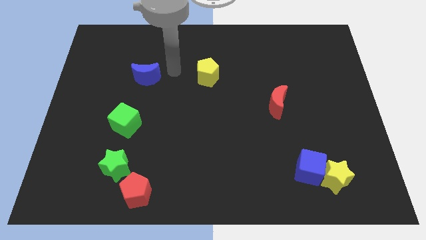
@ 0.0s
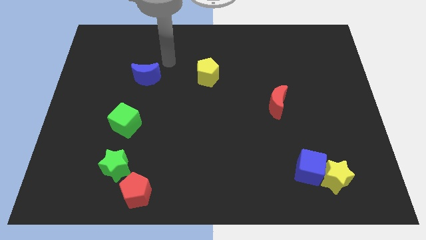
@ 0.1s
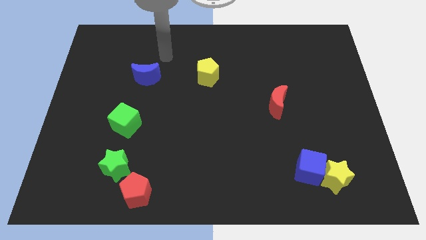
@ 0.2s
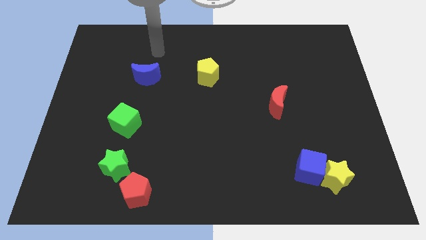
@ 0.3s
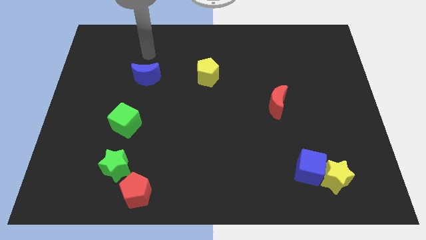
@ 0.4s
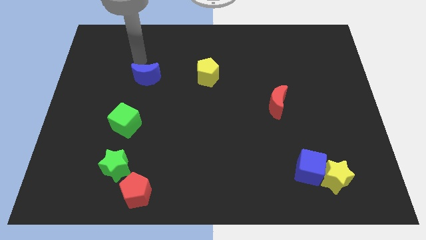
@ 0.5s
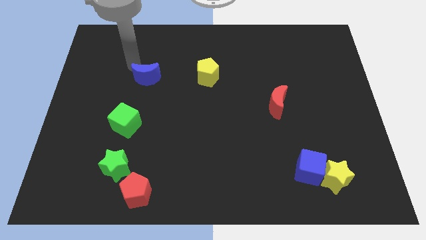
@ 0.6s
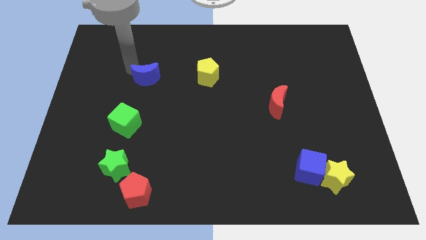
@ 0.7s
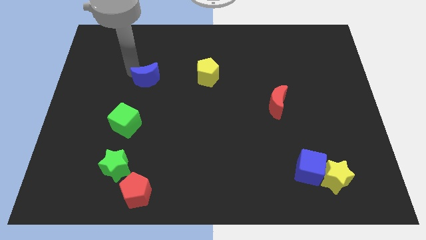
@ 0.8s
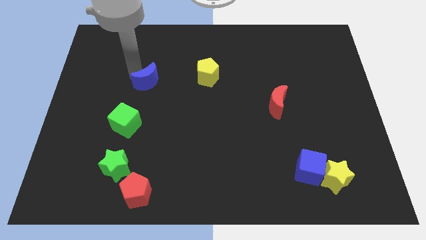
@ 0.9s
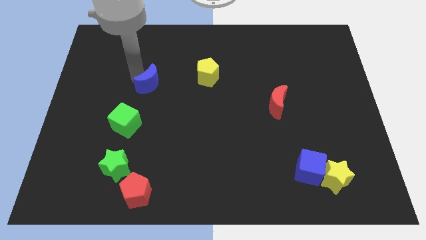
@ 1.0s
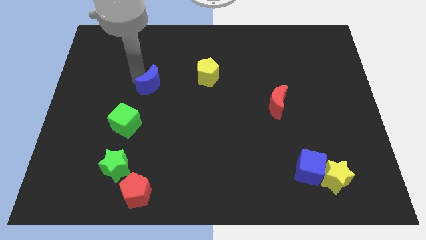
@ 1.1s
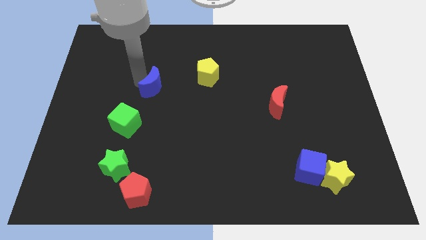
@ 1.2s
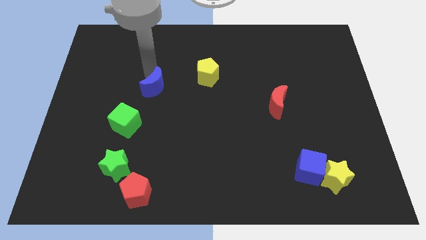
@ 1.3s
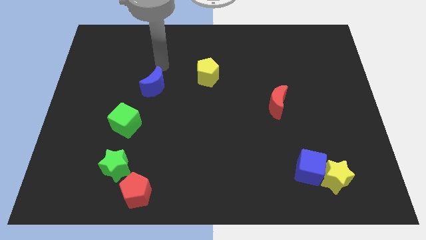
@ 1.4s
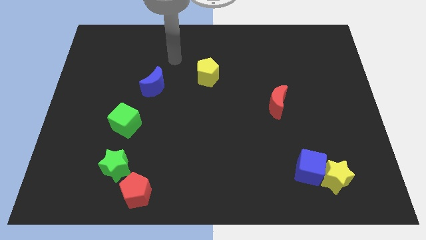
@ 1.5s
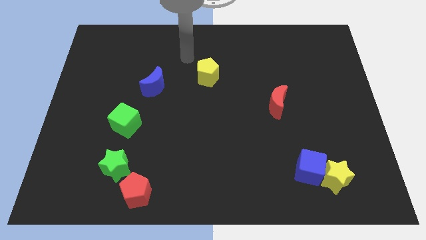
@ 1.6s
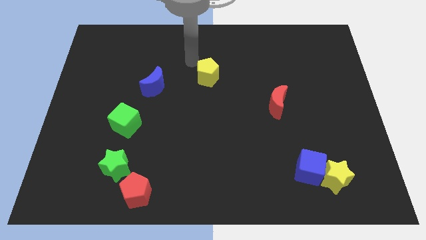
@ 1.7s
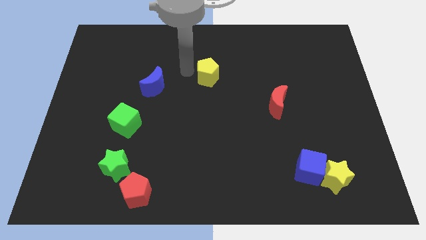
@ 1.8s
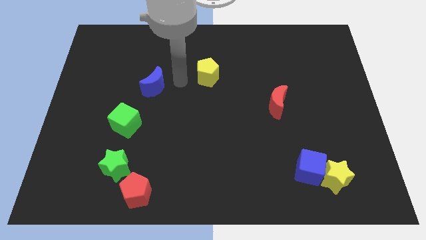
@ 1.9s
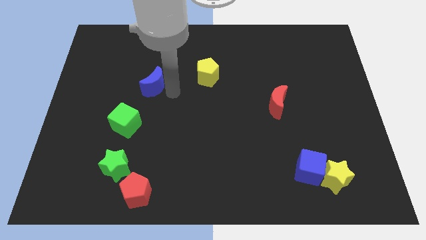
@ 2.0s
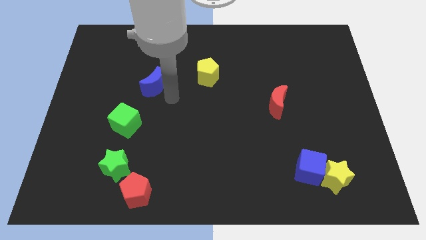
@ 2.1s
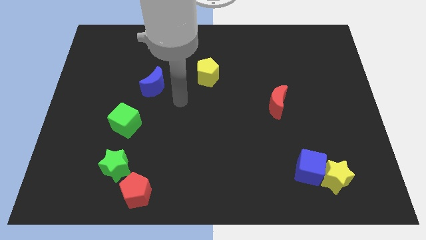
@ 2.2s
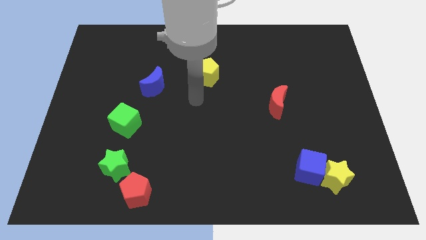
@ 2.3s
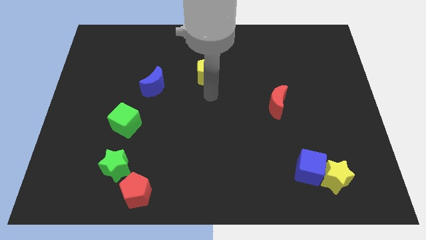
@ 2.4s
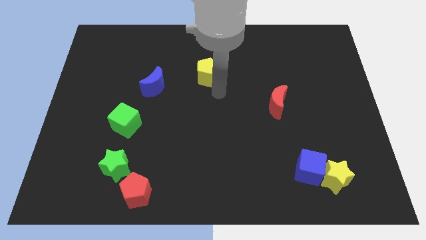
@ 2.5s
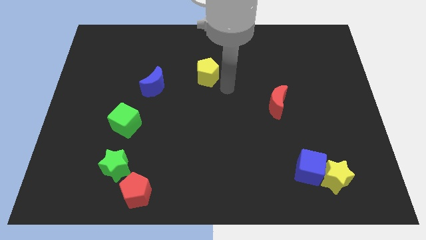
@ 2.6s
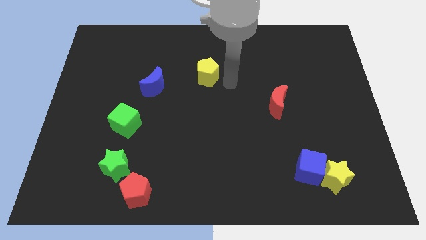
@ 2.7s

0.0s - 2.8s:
move the blue moon slightly towards the center of the board

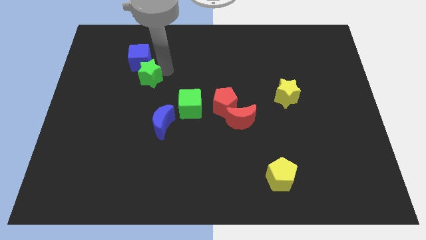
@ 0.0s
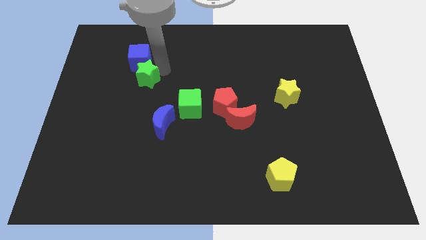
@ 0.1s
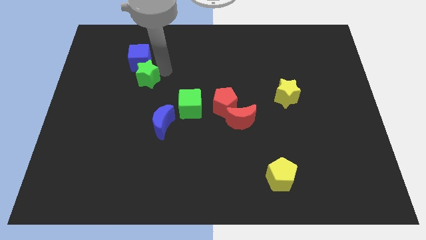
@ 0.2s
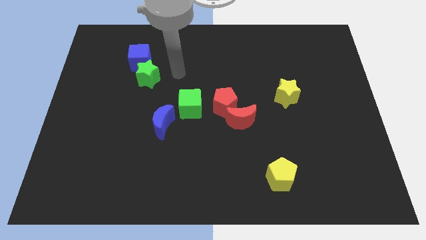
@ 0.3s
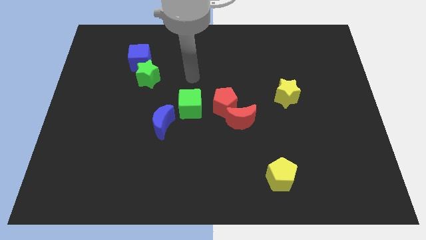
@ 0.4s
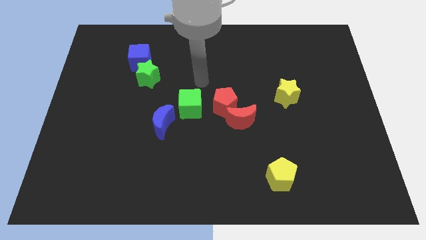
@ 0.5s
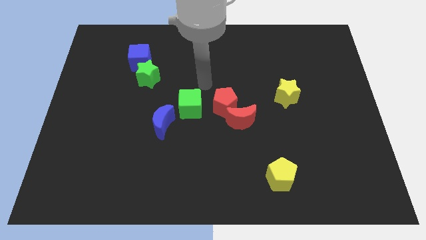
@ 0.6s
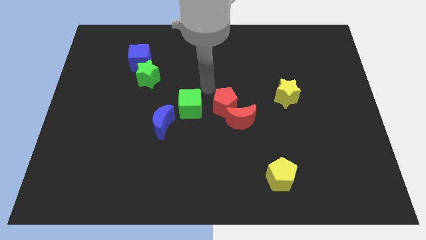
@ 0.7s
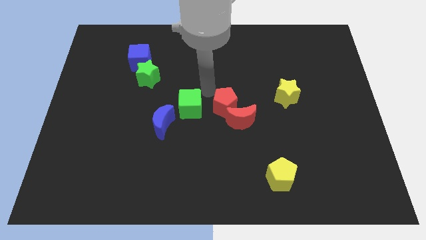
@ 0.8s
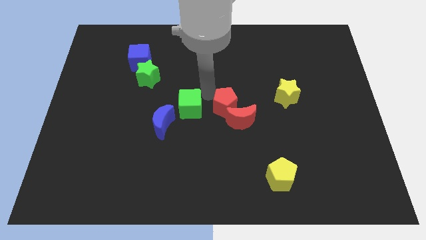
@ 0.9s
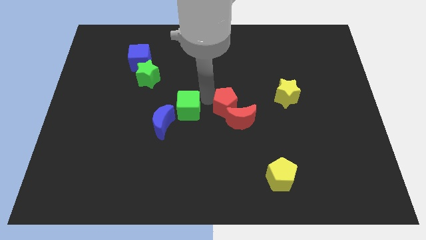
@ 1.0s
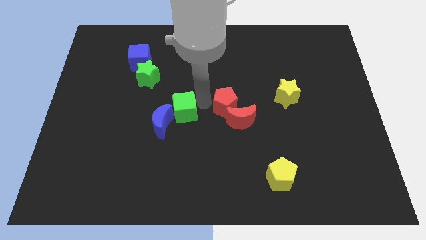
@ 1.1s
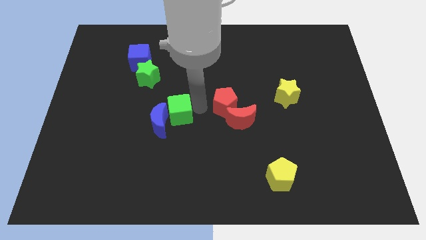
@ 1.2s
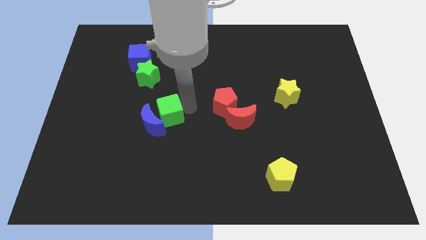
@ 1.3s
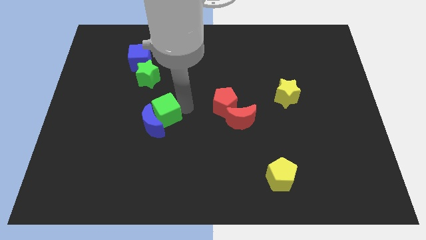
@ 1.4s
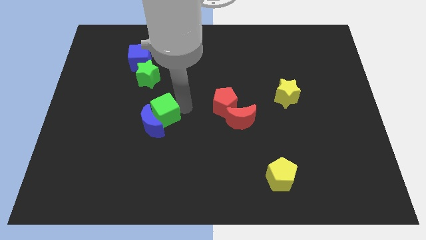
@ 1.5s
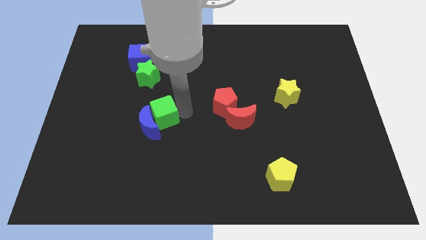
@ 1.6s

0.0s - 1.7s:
push green cube into the blue moon

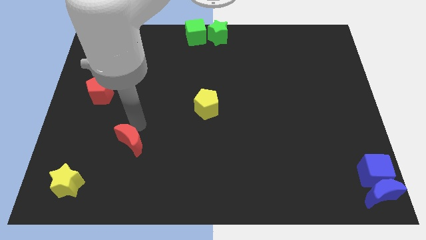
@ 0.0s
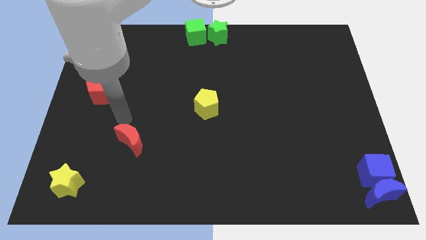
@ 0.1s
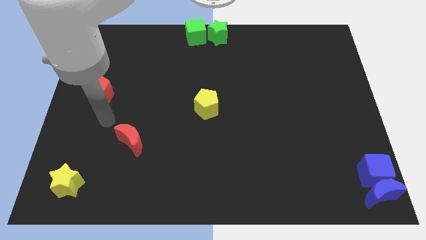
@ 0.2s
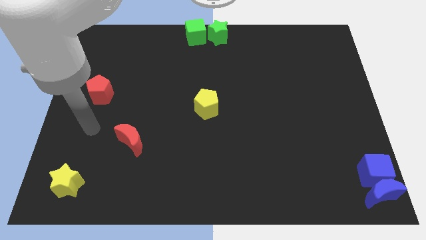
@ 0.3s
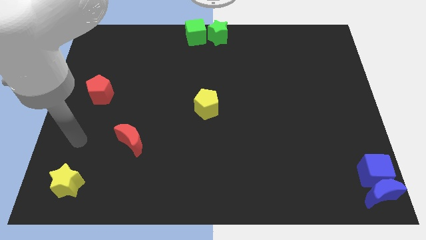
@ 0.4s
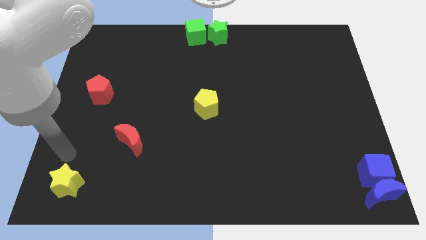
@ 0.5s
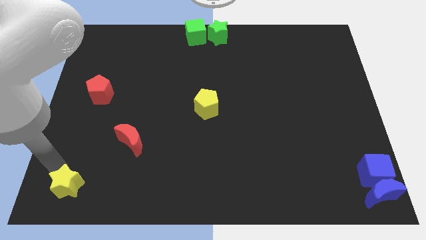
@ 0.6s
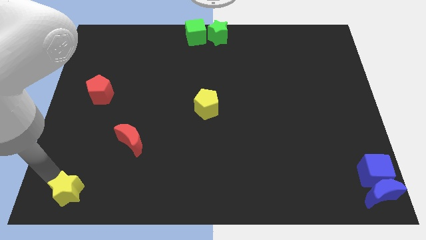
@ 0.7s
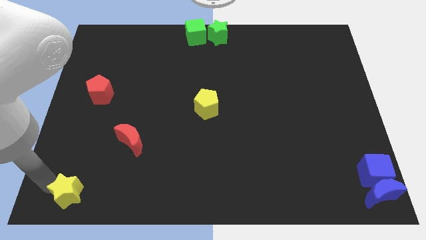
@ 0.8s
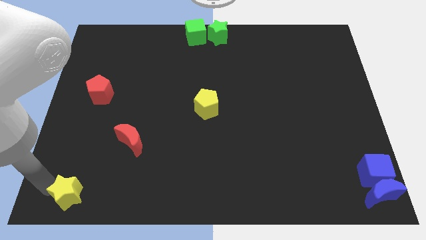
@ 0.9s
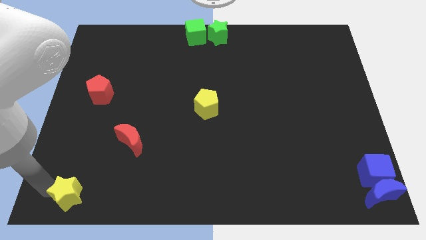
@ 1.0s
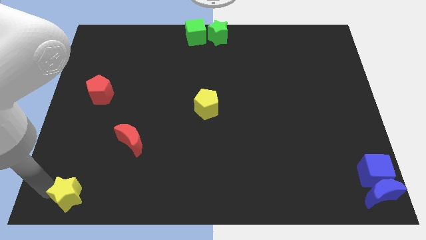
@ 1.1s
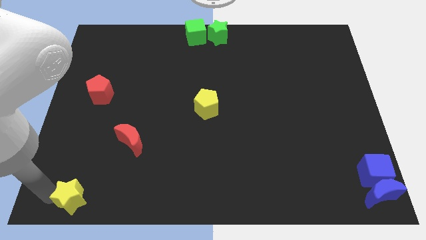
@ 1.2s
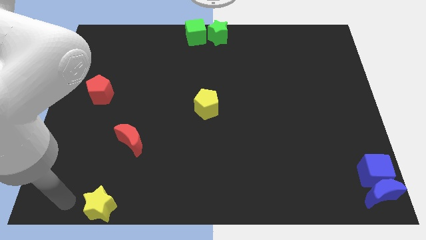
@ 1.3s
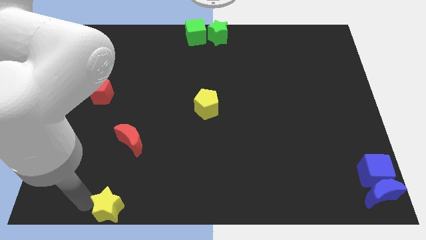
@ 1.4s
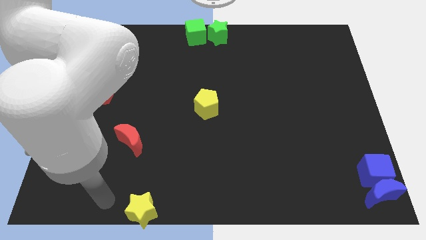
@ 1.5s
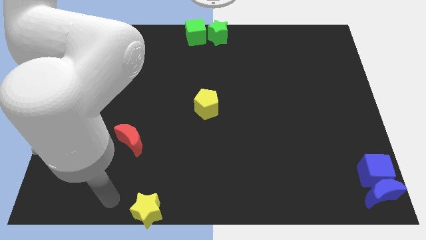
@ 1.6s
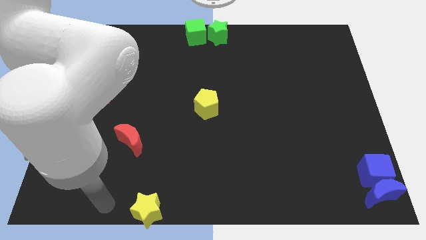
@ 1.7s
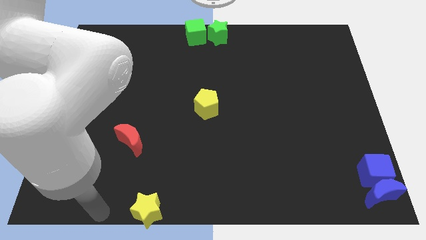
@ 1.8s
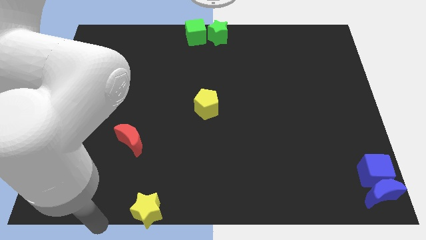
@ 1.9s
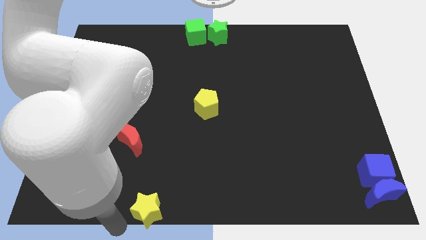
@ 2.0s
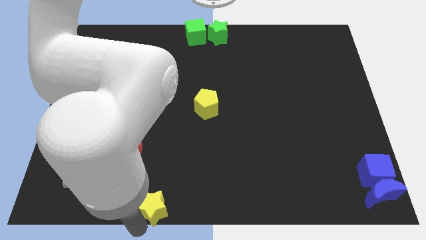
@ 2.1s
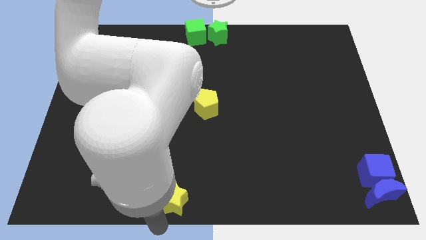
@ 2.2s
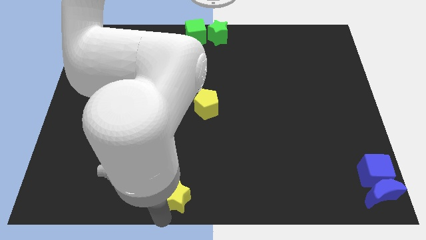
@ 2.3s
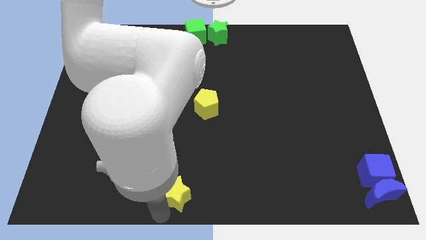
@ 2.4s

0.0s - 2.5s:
move the yellow star to the bottom center of the board

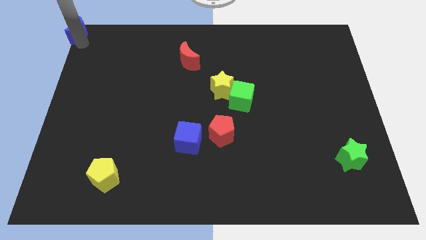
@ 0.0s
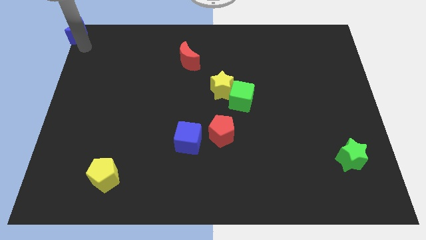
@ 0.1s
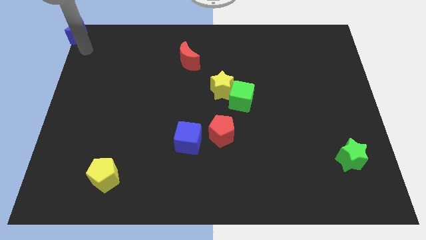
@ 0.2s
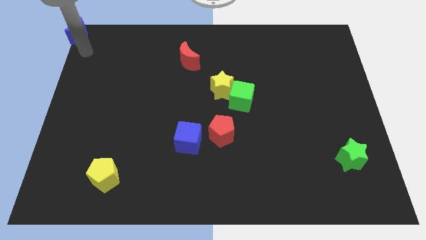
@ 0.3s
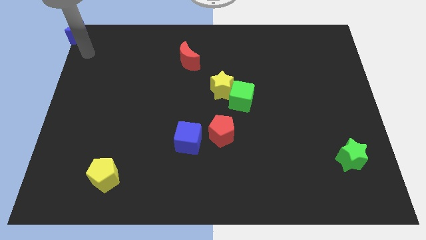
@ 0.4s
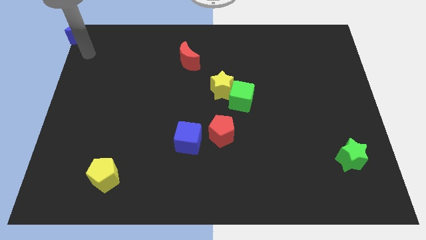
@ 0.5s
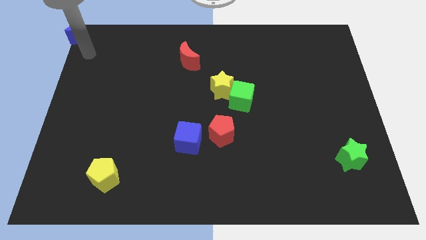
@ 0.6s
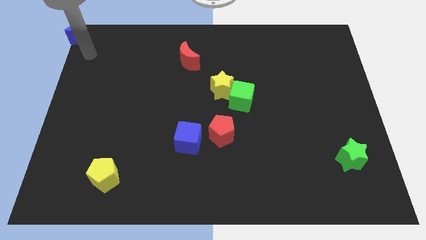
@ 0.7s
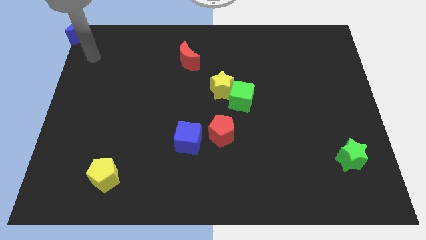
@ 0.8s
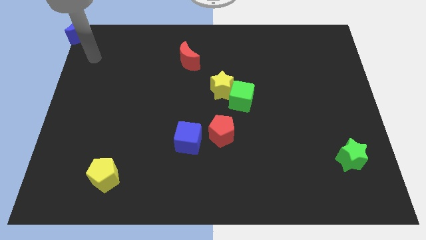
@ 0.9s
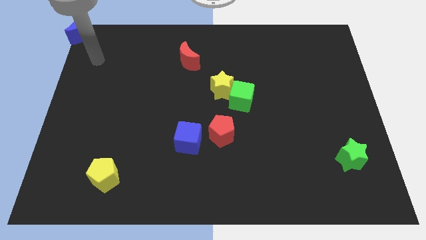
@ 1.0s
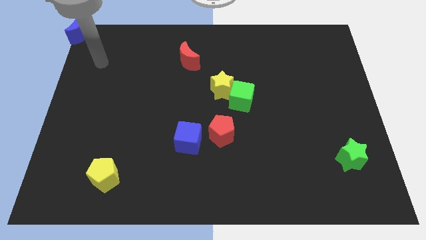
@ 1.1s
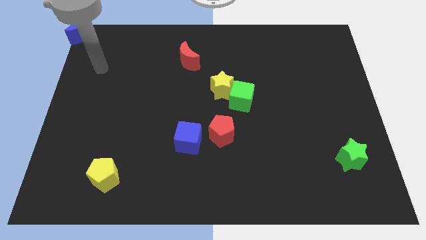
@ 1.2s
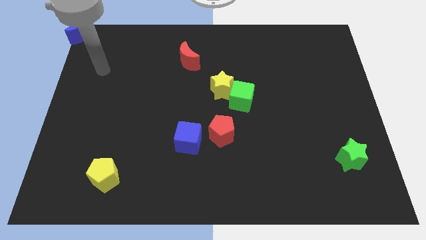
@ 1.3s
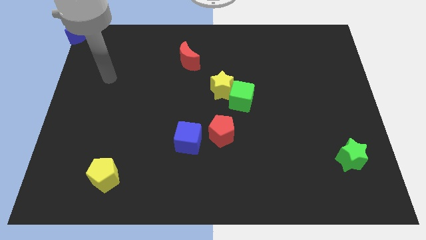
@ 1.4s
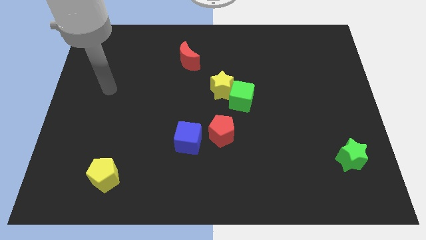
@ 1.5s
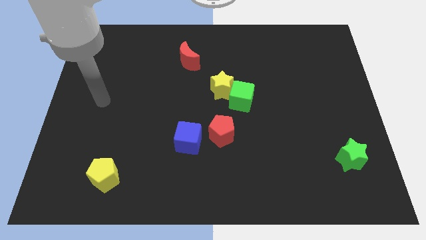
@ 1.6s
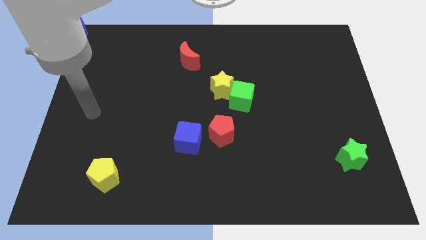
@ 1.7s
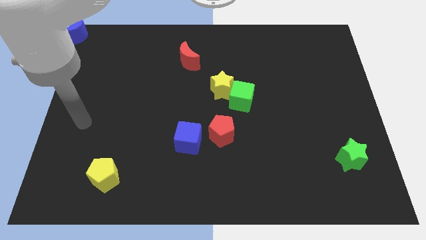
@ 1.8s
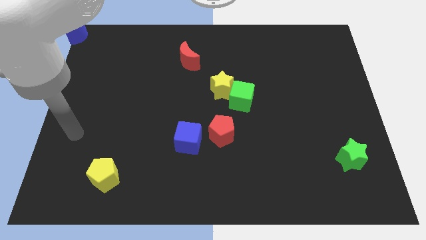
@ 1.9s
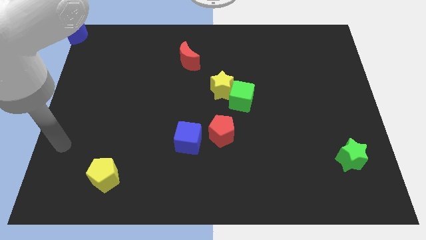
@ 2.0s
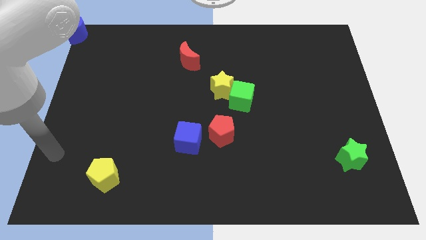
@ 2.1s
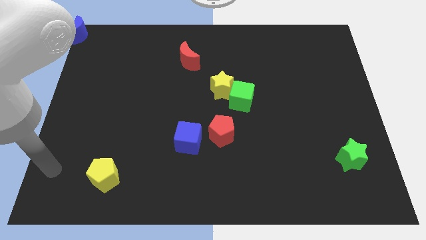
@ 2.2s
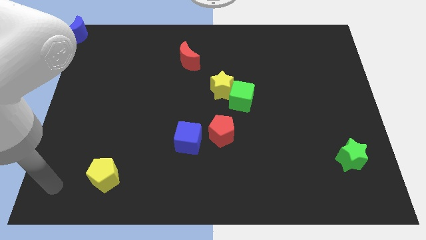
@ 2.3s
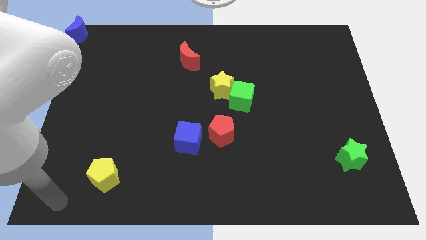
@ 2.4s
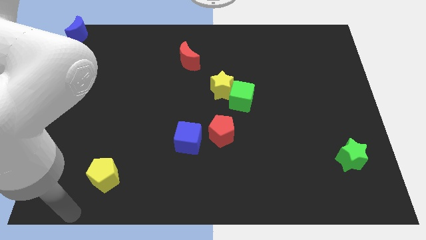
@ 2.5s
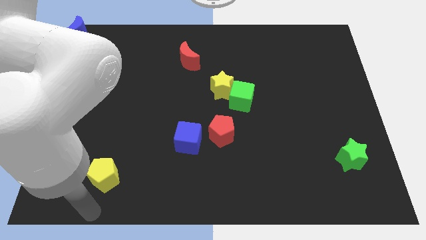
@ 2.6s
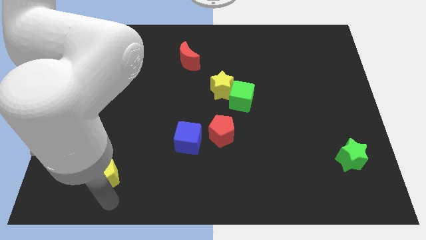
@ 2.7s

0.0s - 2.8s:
move your arm away from the blue moon
